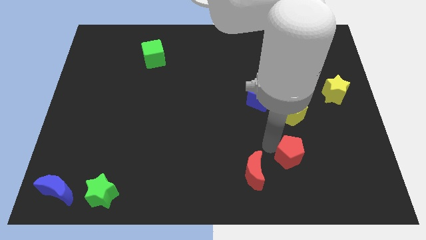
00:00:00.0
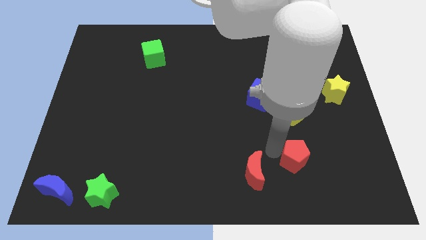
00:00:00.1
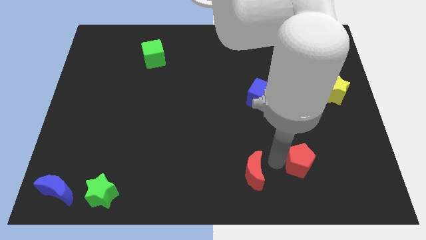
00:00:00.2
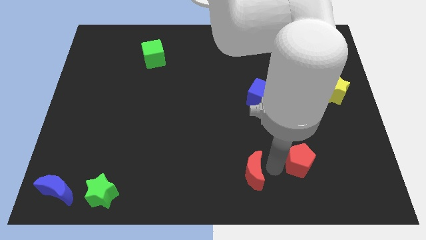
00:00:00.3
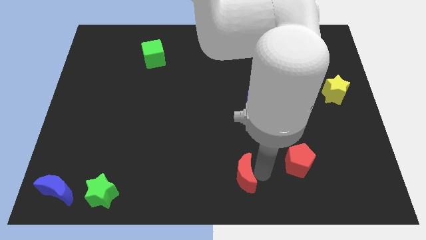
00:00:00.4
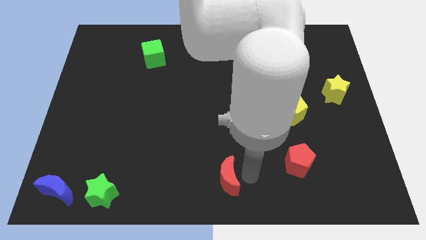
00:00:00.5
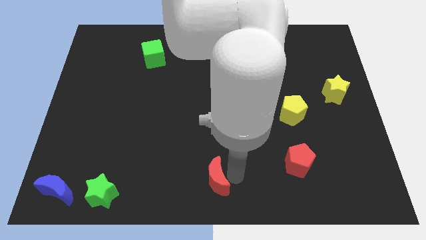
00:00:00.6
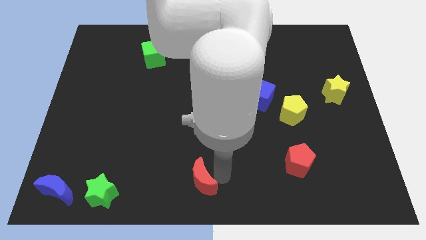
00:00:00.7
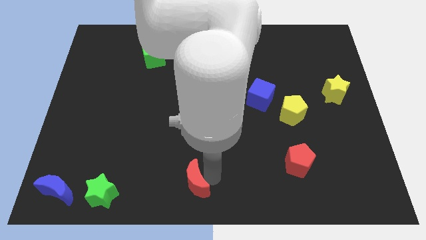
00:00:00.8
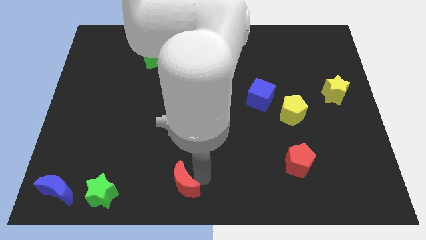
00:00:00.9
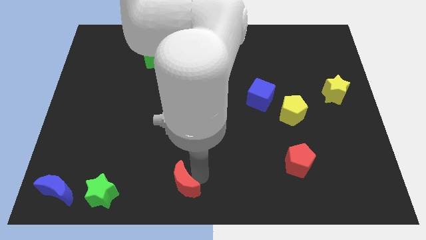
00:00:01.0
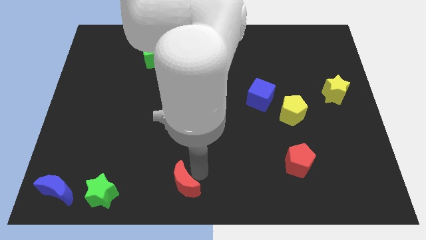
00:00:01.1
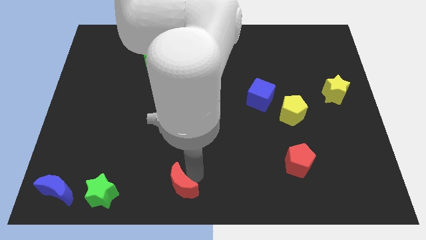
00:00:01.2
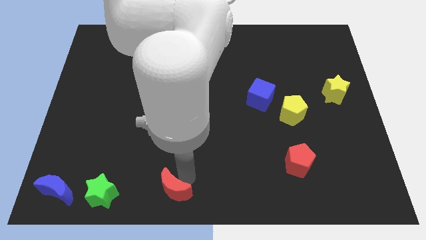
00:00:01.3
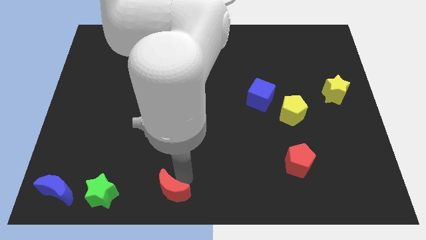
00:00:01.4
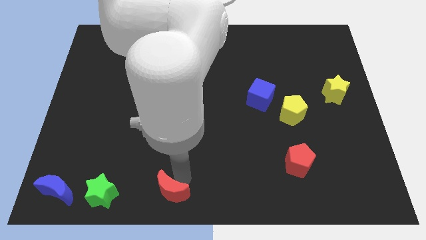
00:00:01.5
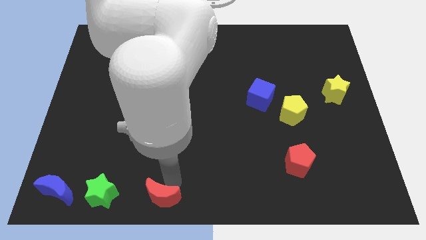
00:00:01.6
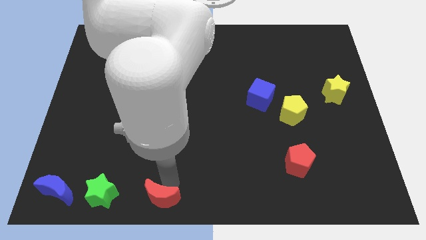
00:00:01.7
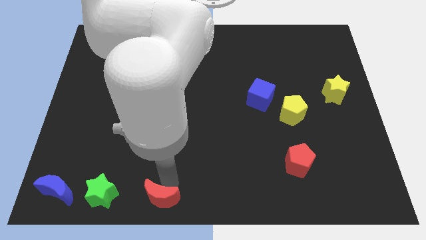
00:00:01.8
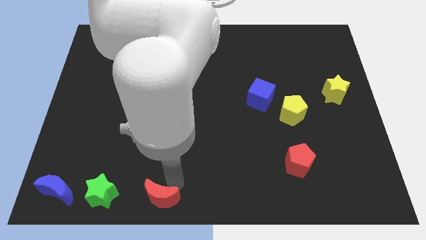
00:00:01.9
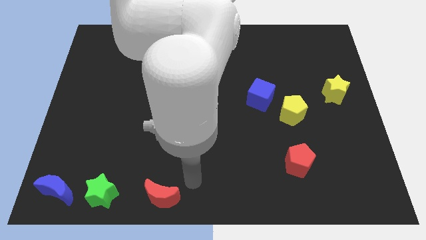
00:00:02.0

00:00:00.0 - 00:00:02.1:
move the red crescent away from the red pentagon

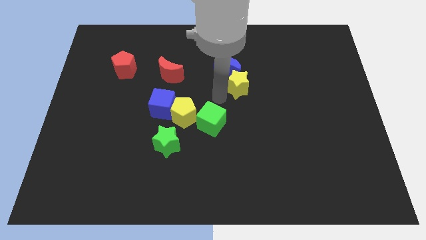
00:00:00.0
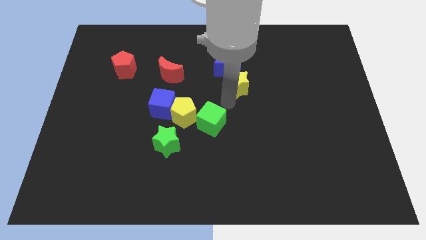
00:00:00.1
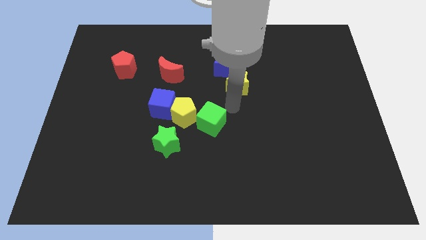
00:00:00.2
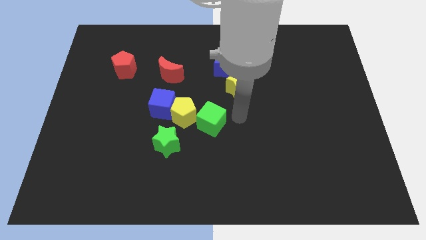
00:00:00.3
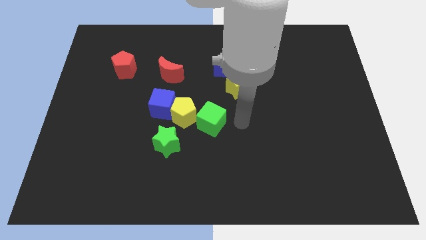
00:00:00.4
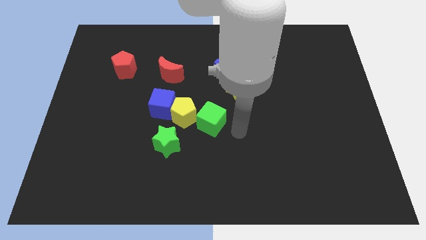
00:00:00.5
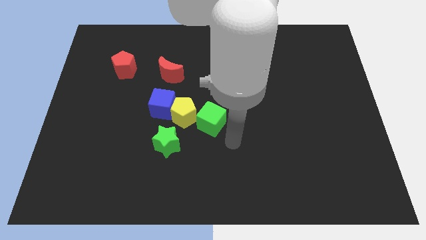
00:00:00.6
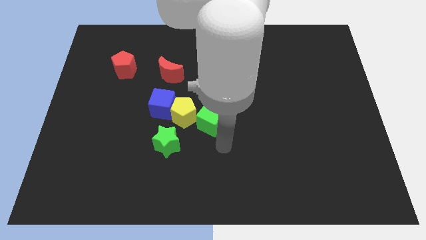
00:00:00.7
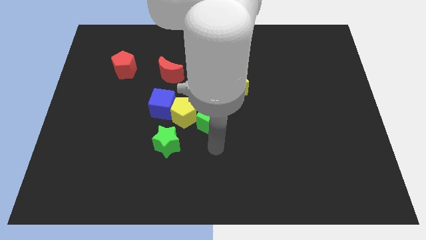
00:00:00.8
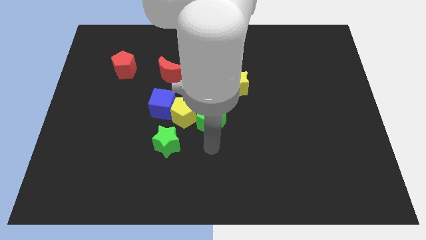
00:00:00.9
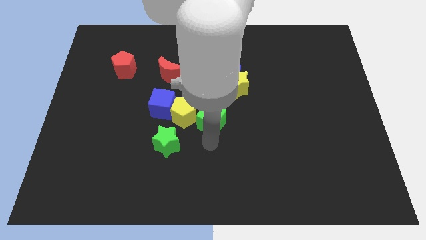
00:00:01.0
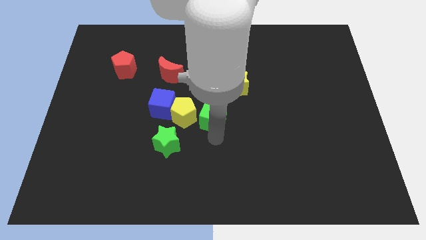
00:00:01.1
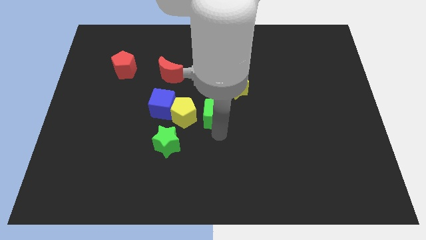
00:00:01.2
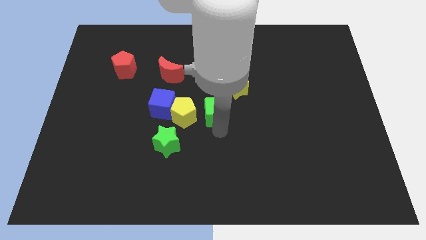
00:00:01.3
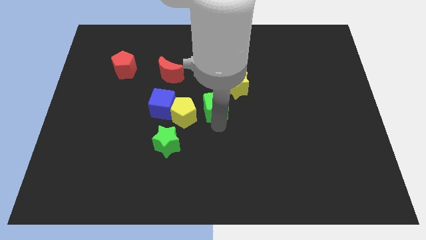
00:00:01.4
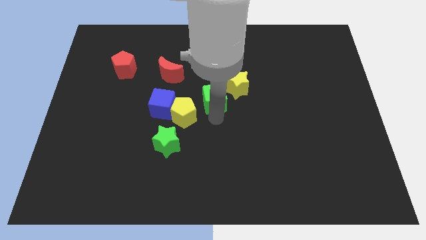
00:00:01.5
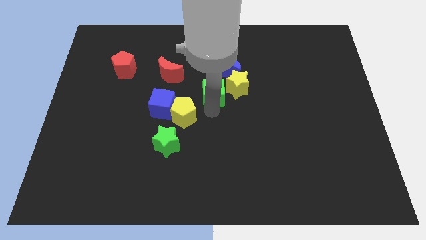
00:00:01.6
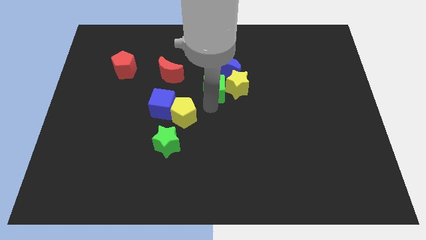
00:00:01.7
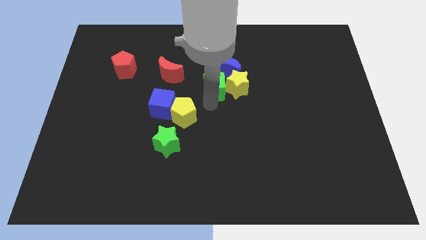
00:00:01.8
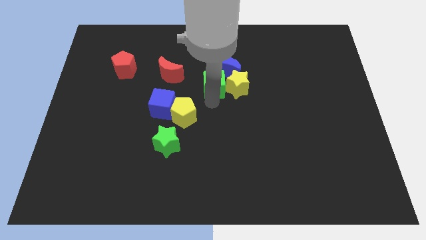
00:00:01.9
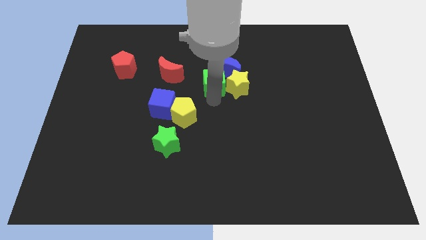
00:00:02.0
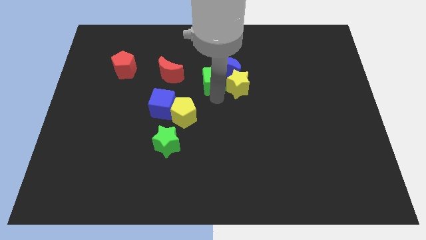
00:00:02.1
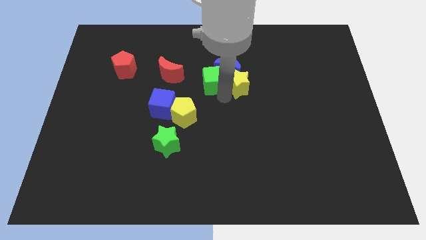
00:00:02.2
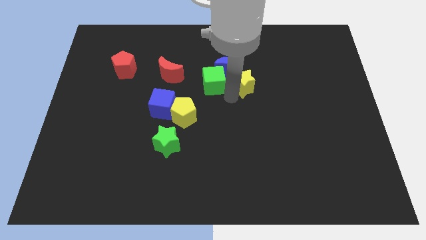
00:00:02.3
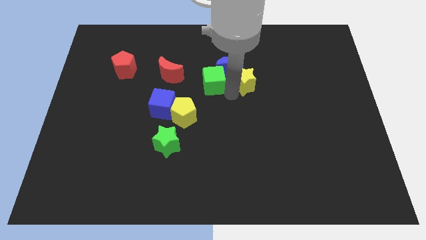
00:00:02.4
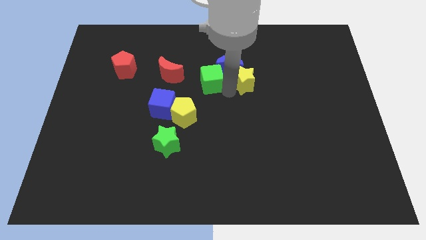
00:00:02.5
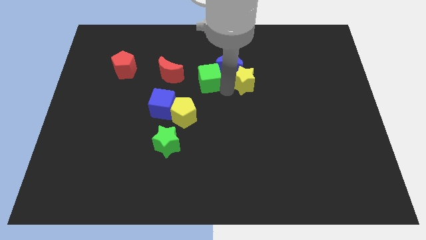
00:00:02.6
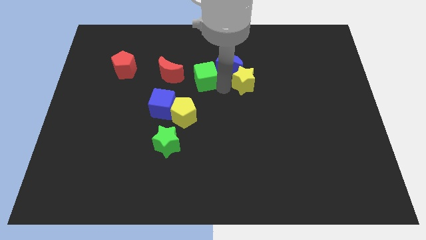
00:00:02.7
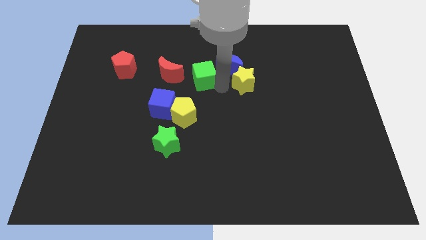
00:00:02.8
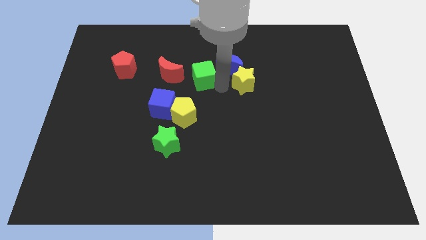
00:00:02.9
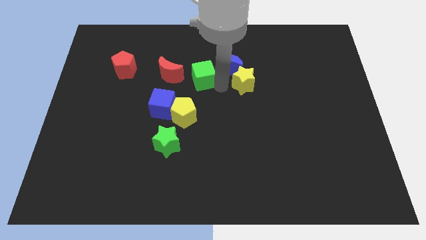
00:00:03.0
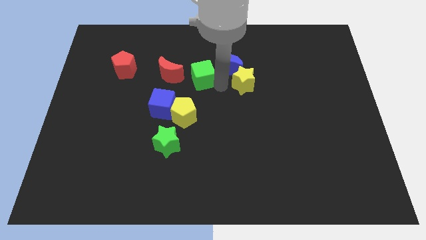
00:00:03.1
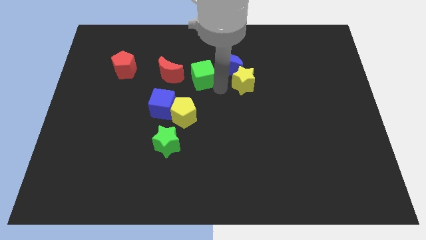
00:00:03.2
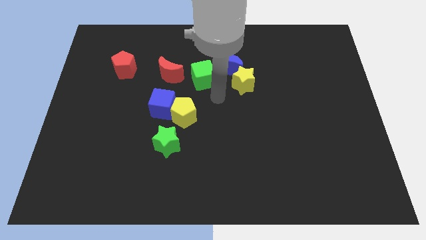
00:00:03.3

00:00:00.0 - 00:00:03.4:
separate the green cube from the yellow pentagon

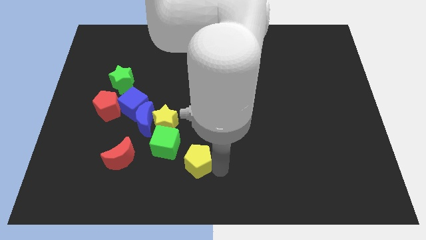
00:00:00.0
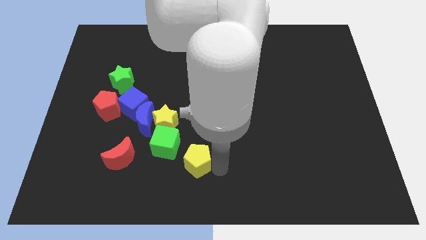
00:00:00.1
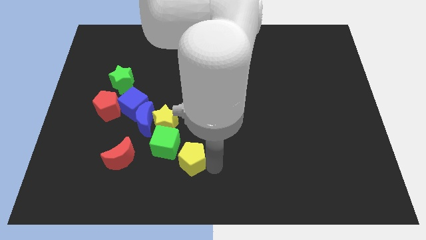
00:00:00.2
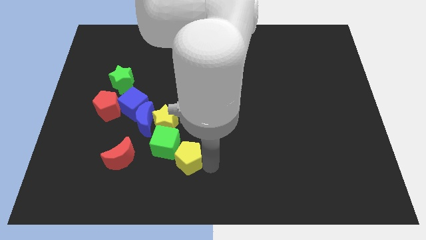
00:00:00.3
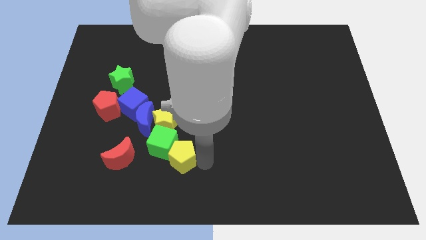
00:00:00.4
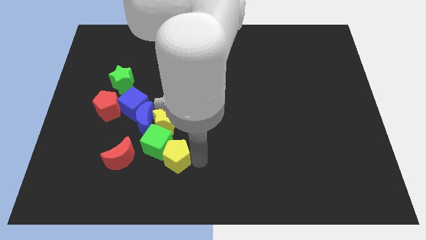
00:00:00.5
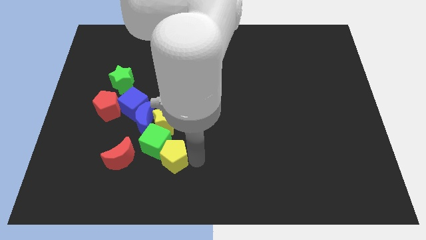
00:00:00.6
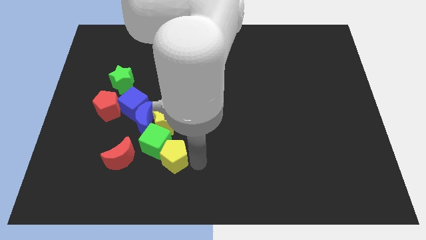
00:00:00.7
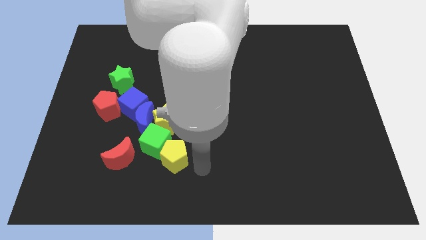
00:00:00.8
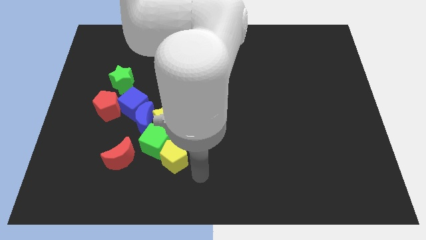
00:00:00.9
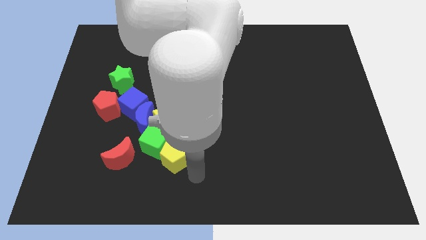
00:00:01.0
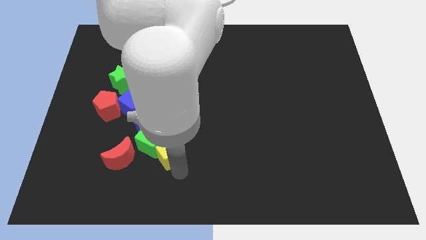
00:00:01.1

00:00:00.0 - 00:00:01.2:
move yellow pentagon into green cube

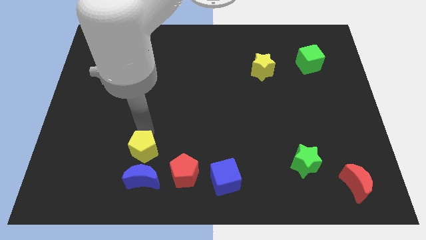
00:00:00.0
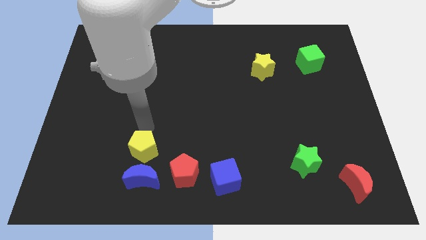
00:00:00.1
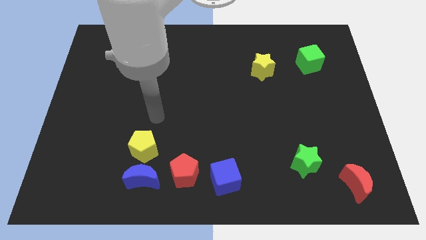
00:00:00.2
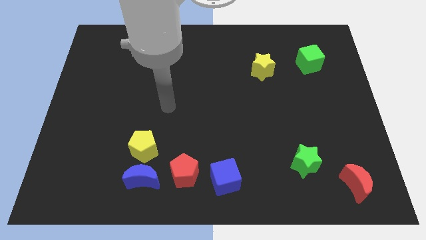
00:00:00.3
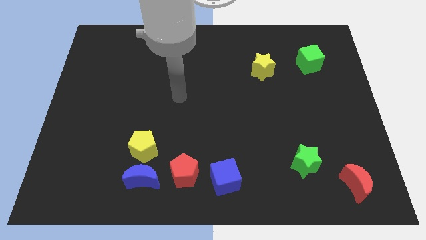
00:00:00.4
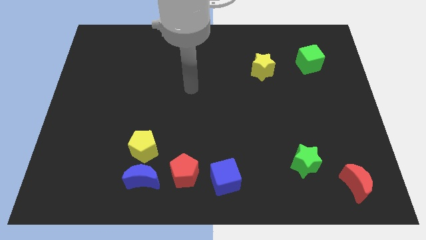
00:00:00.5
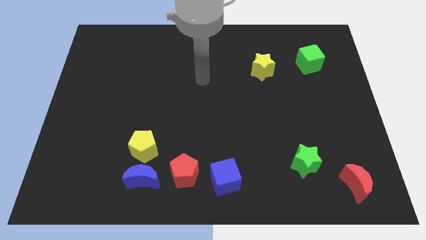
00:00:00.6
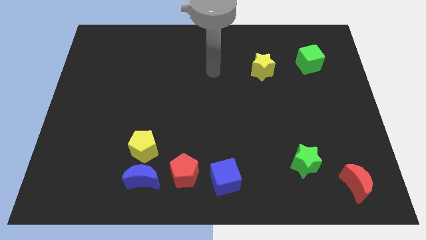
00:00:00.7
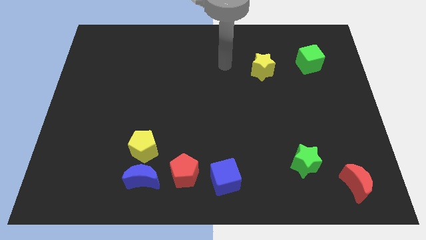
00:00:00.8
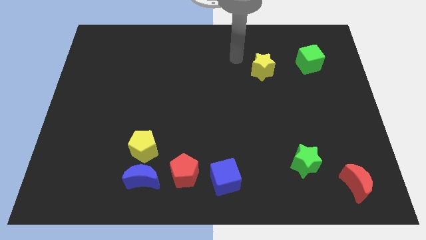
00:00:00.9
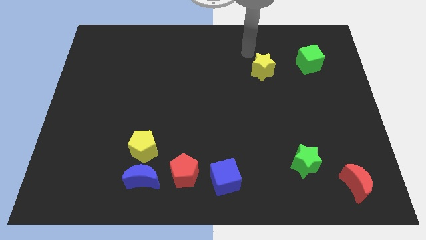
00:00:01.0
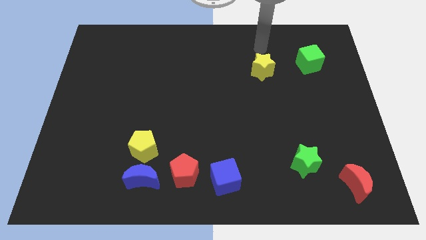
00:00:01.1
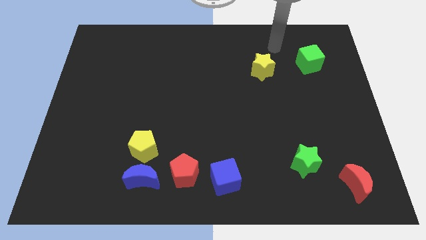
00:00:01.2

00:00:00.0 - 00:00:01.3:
move your arm away from the yellow pentagon

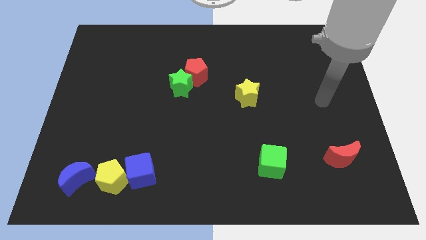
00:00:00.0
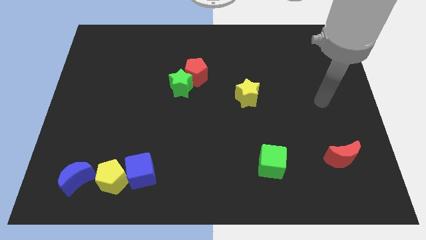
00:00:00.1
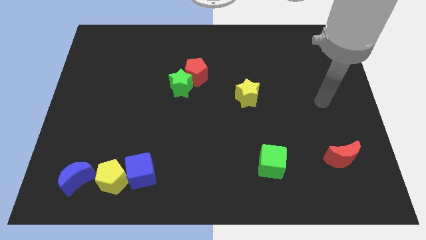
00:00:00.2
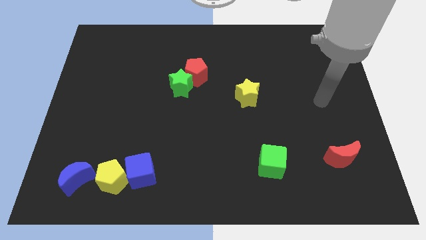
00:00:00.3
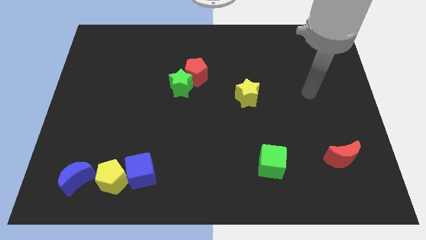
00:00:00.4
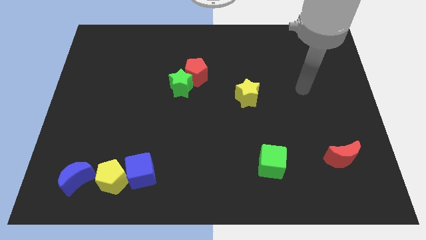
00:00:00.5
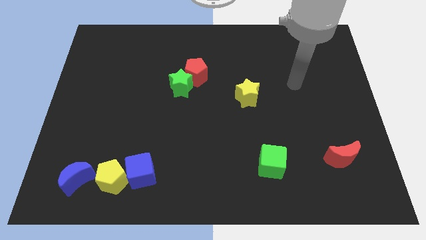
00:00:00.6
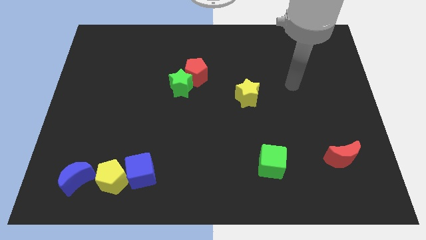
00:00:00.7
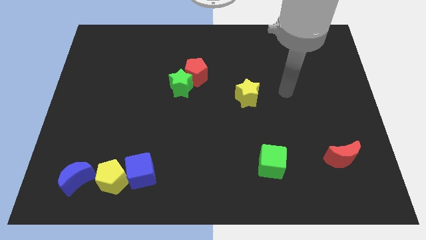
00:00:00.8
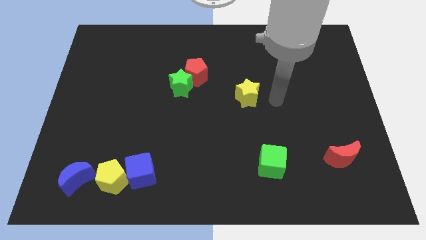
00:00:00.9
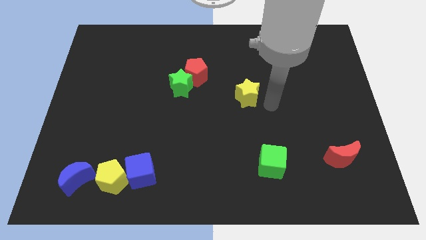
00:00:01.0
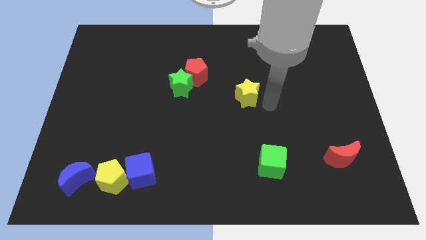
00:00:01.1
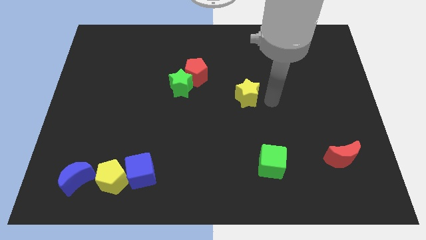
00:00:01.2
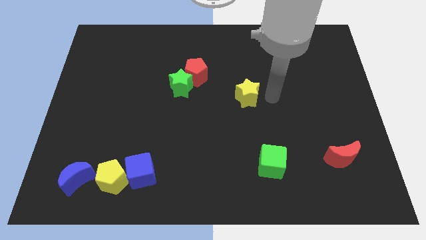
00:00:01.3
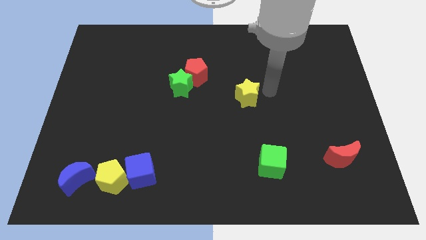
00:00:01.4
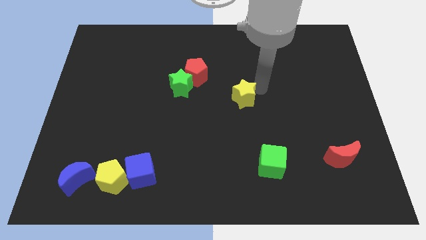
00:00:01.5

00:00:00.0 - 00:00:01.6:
place your arm at the top right of yellow star
